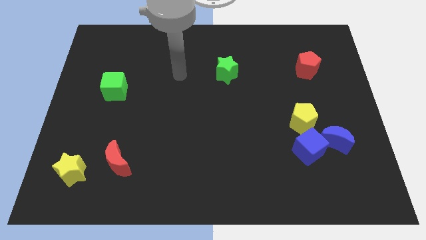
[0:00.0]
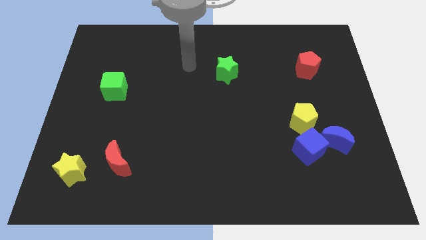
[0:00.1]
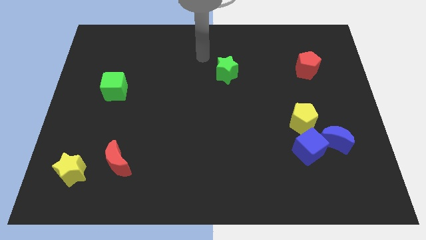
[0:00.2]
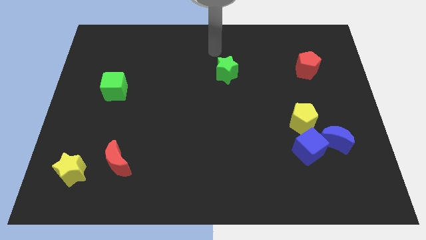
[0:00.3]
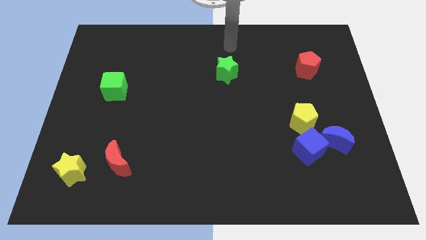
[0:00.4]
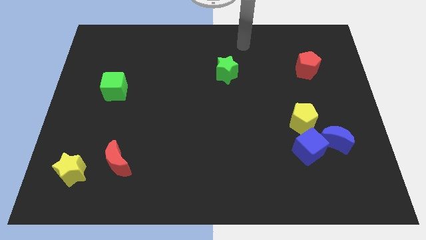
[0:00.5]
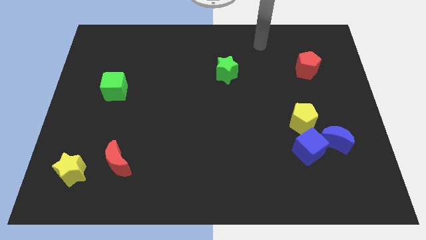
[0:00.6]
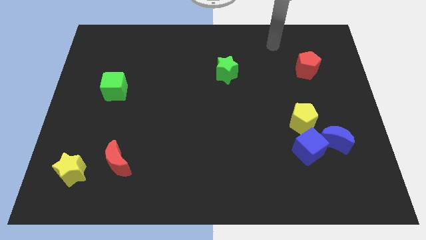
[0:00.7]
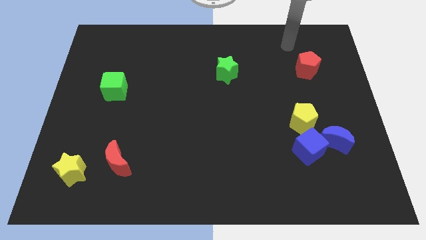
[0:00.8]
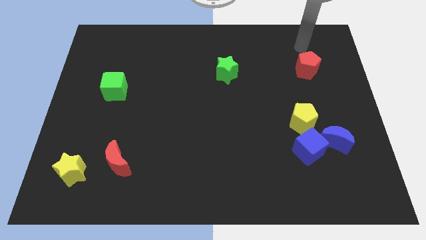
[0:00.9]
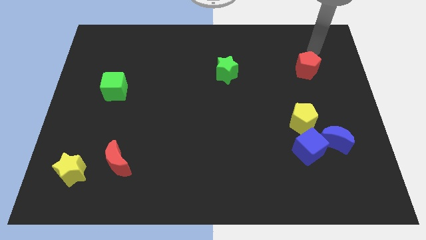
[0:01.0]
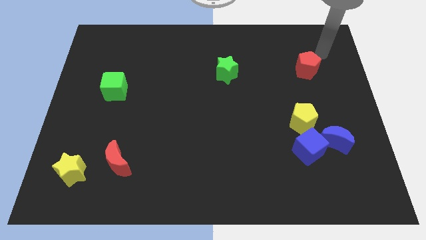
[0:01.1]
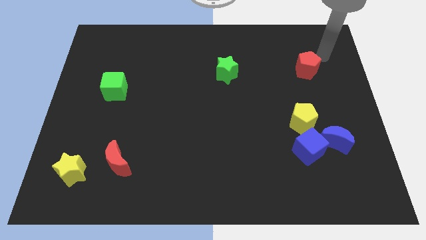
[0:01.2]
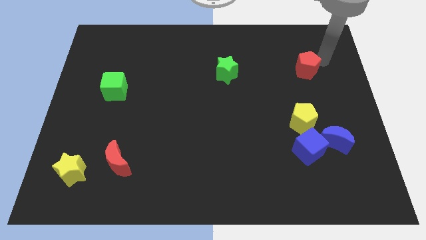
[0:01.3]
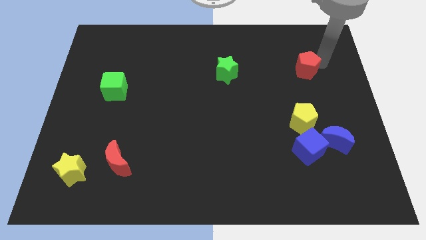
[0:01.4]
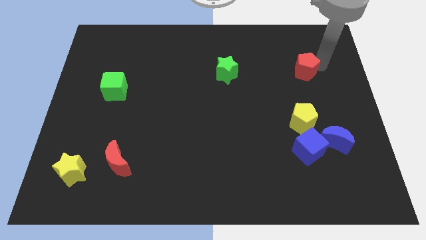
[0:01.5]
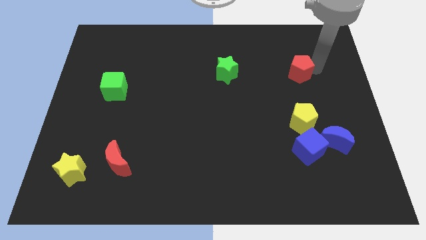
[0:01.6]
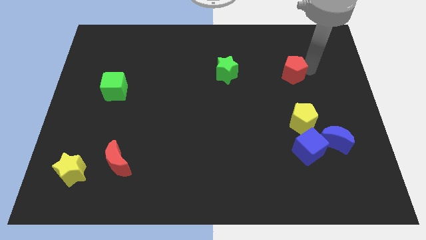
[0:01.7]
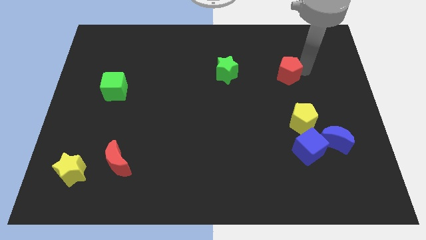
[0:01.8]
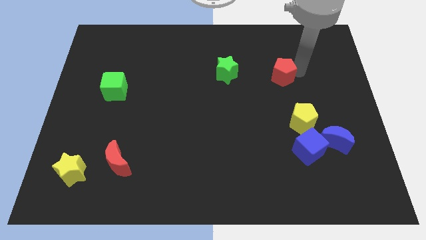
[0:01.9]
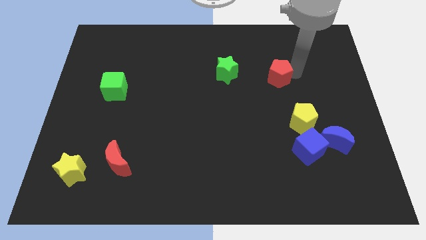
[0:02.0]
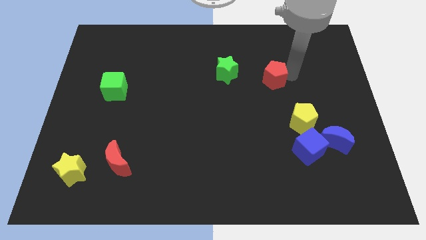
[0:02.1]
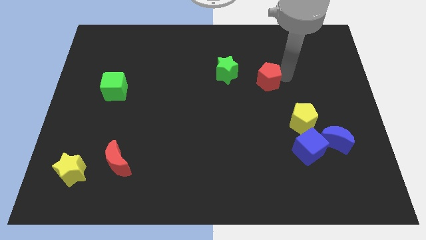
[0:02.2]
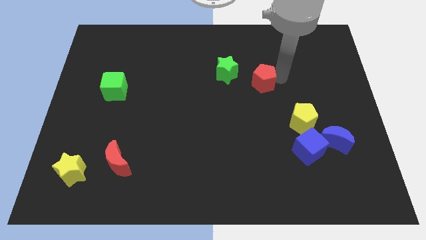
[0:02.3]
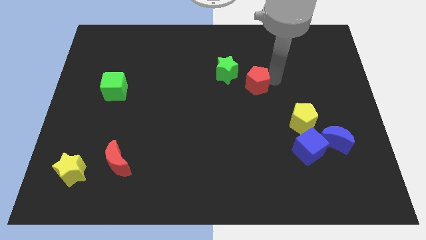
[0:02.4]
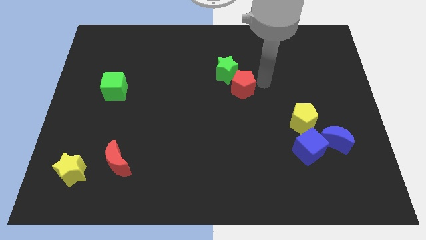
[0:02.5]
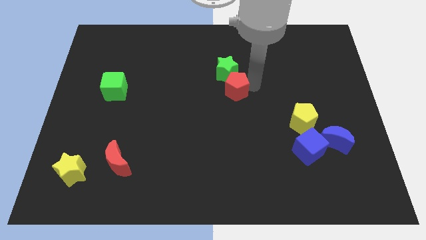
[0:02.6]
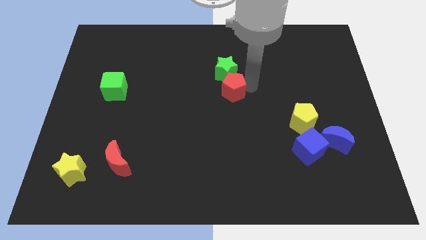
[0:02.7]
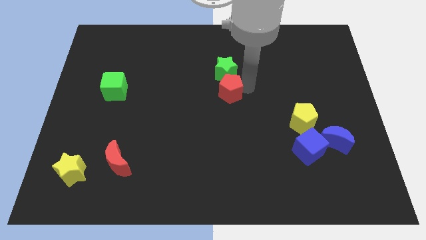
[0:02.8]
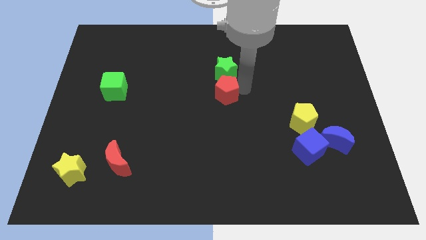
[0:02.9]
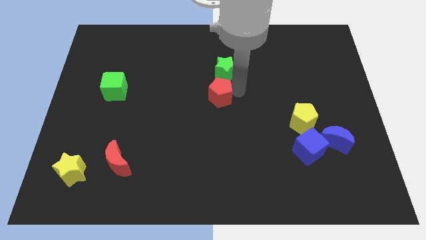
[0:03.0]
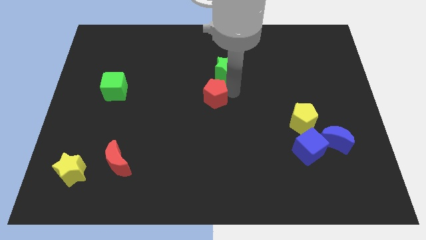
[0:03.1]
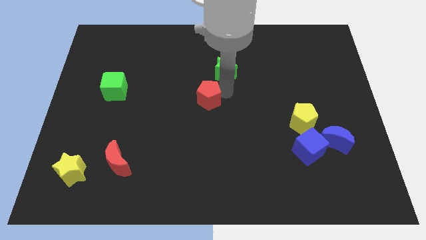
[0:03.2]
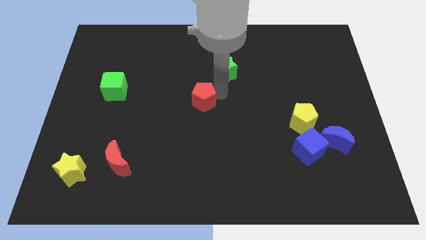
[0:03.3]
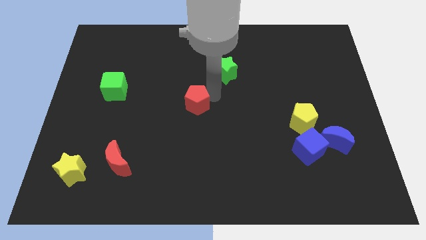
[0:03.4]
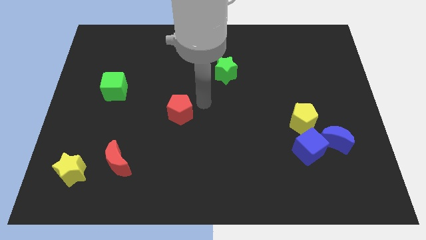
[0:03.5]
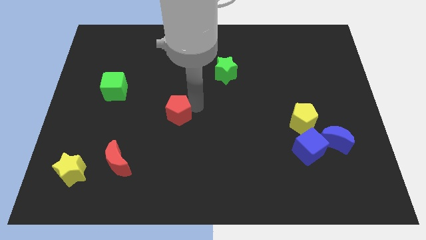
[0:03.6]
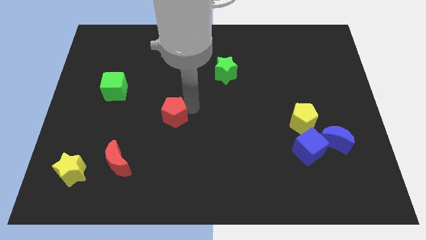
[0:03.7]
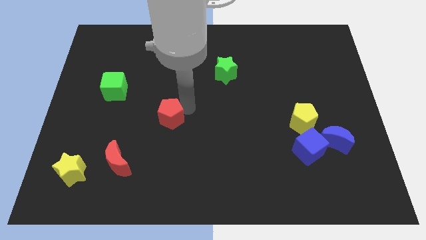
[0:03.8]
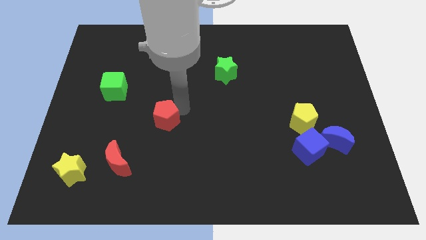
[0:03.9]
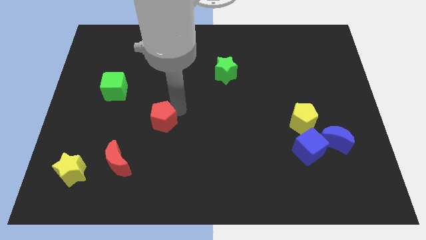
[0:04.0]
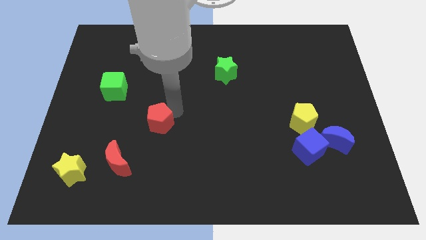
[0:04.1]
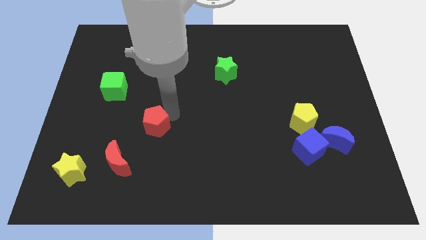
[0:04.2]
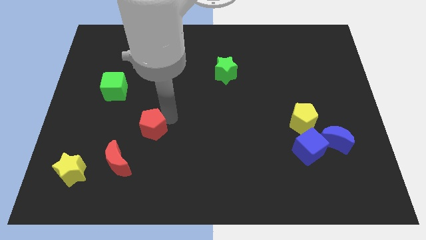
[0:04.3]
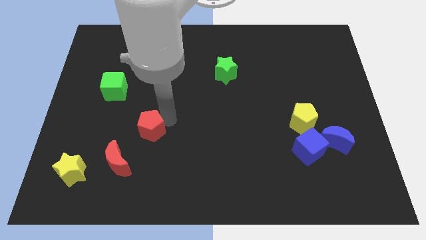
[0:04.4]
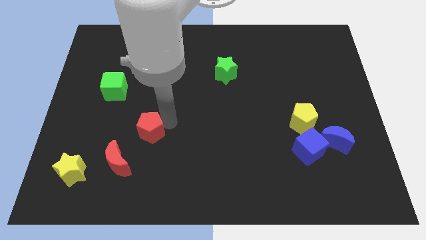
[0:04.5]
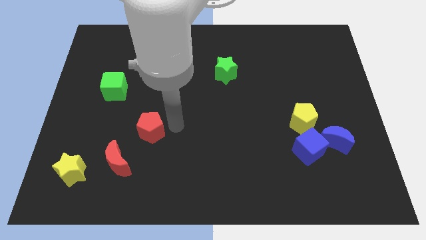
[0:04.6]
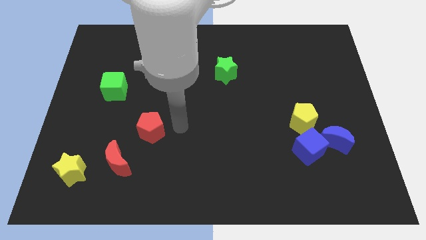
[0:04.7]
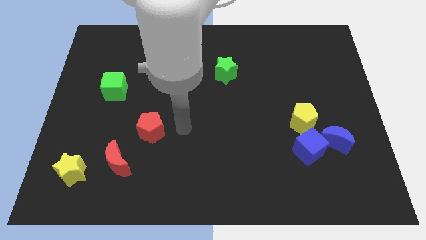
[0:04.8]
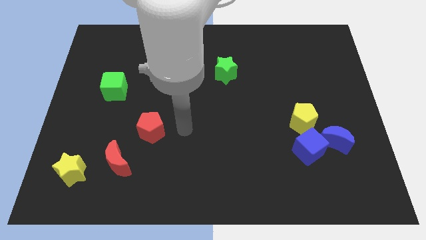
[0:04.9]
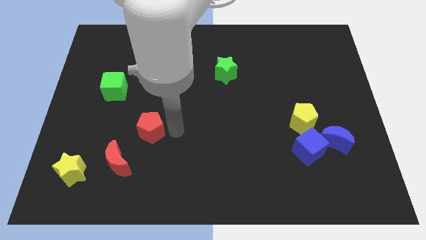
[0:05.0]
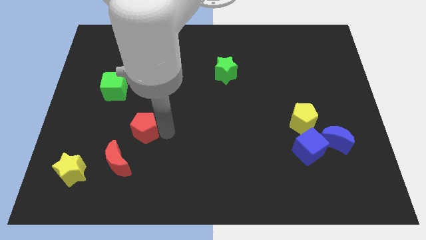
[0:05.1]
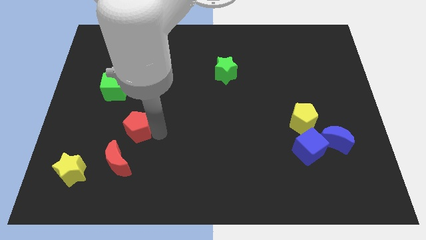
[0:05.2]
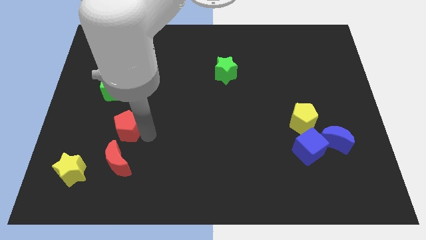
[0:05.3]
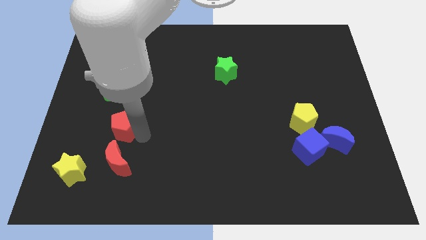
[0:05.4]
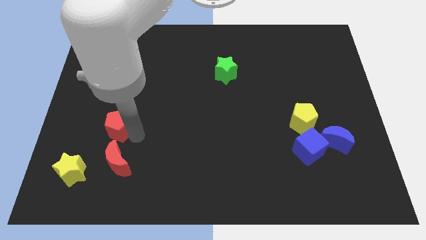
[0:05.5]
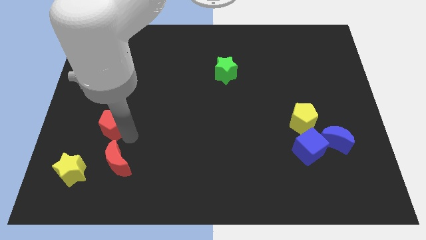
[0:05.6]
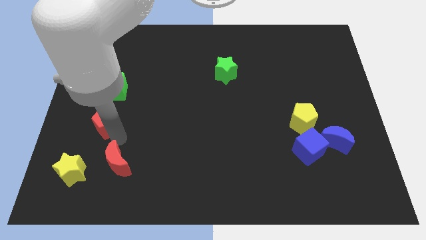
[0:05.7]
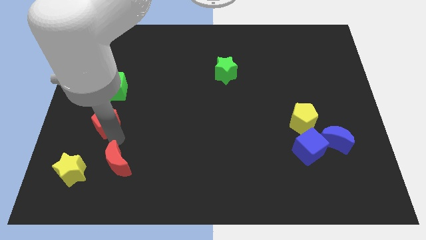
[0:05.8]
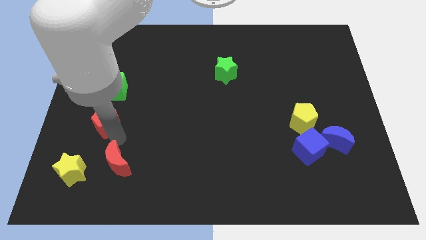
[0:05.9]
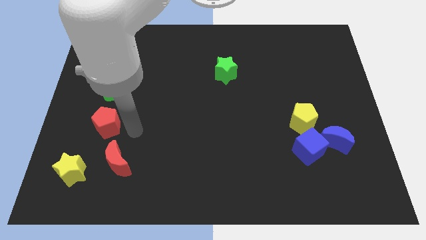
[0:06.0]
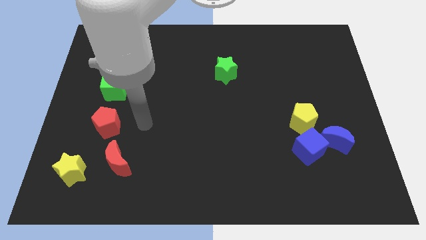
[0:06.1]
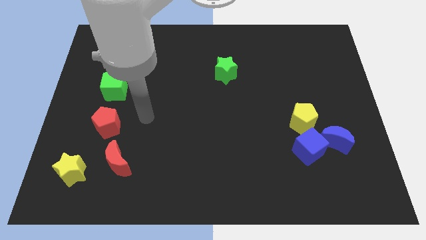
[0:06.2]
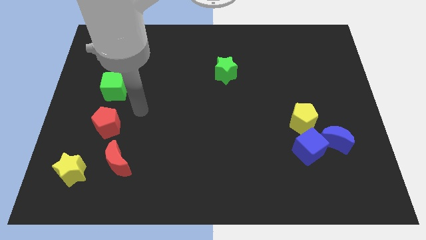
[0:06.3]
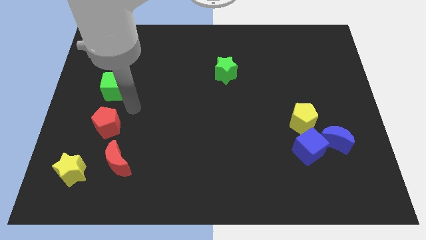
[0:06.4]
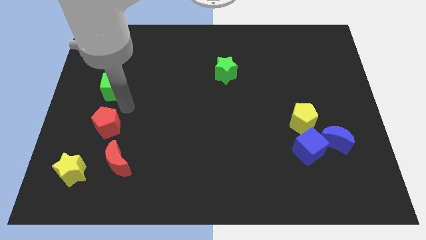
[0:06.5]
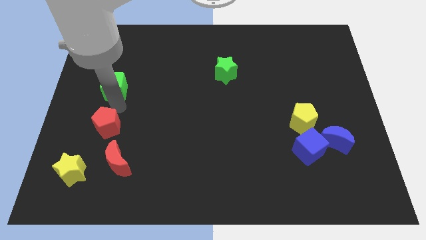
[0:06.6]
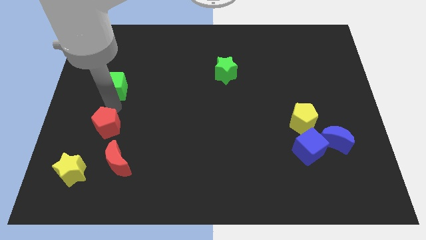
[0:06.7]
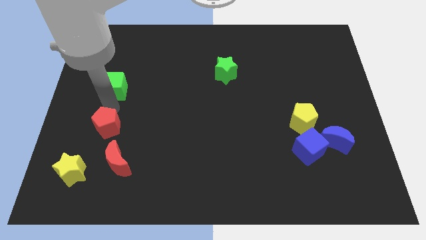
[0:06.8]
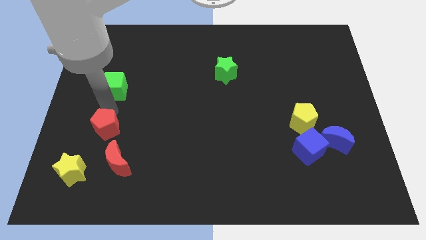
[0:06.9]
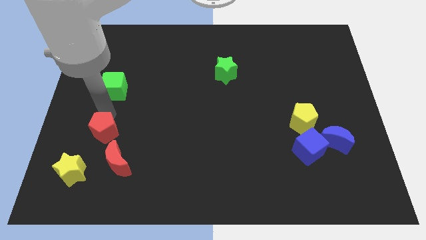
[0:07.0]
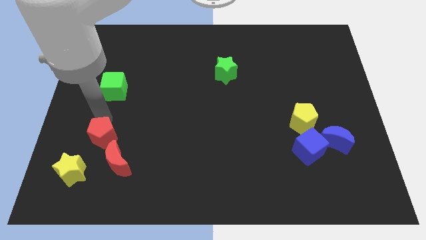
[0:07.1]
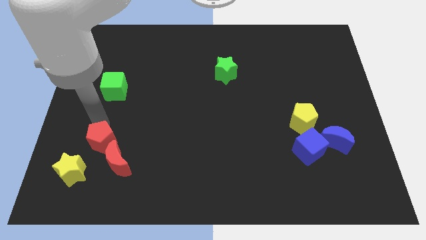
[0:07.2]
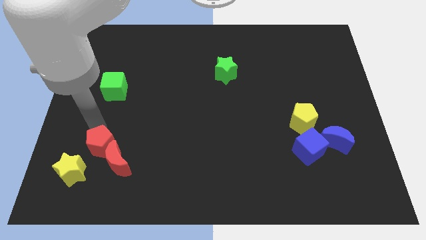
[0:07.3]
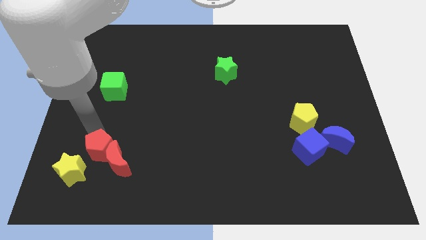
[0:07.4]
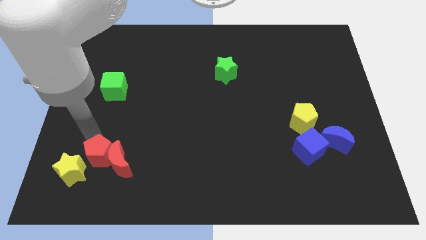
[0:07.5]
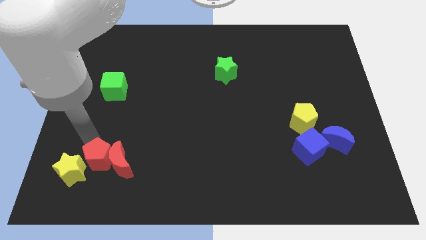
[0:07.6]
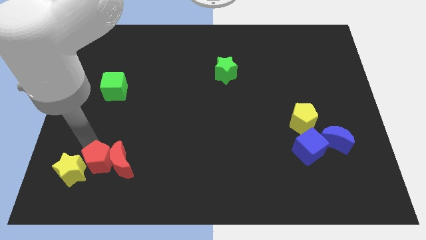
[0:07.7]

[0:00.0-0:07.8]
put the red pentagon close to the yellow star

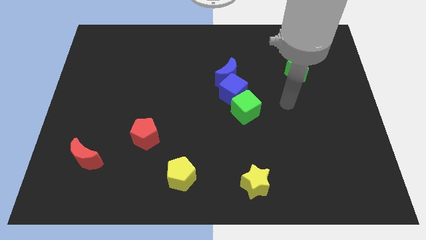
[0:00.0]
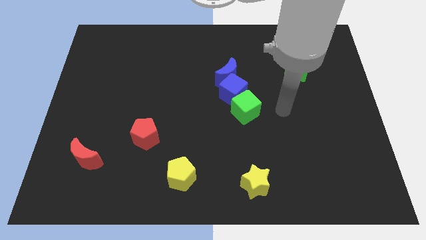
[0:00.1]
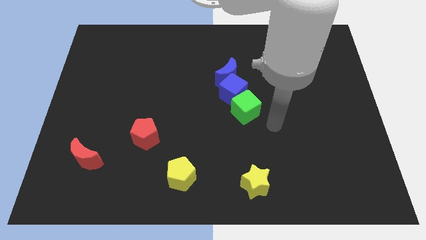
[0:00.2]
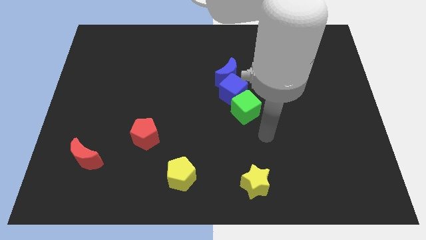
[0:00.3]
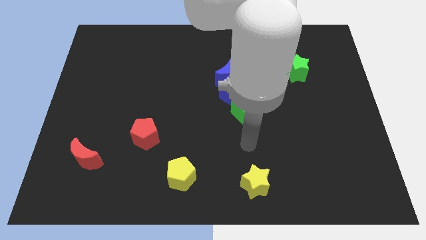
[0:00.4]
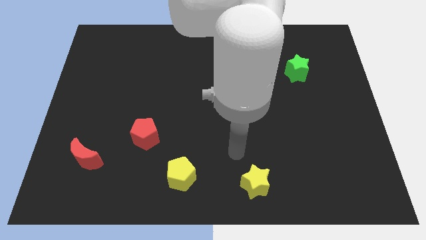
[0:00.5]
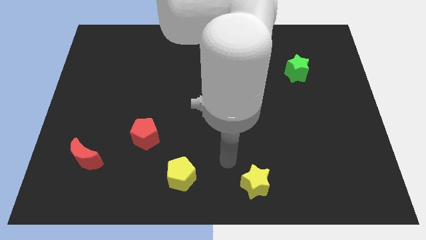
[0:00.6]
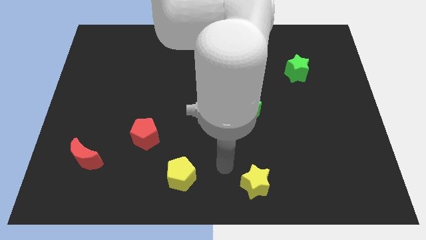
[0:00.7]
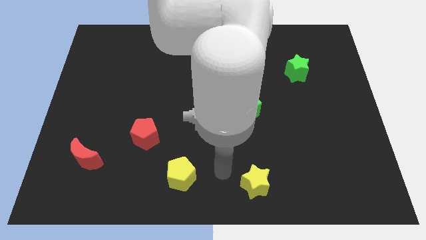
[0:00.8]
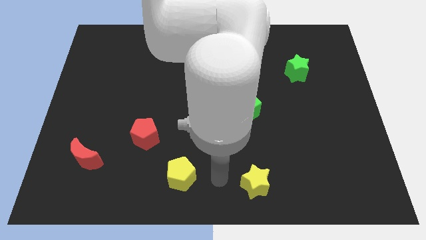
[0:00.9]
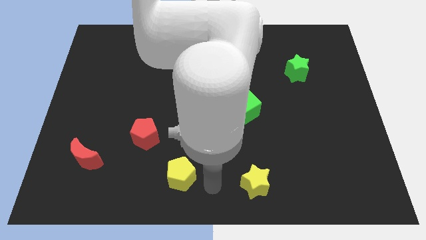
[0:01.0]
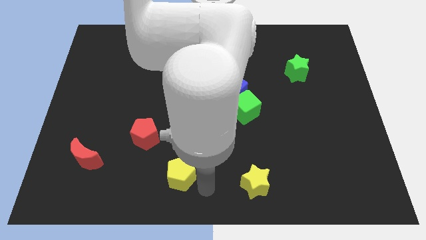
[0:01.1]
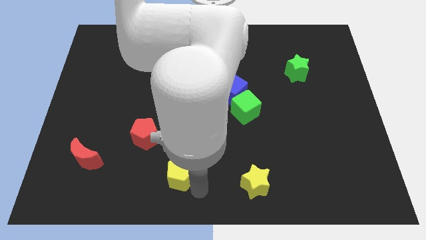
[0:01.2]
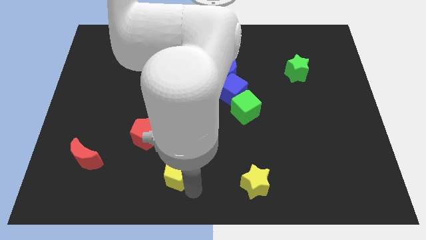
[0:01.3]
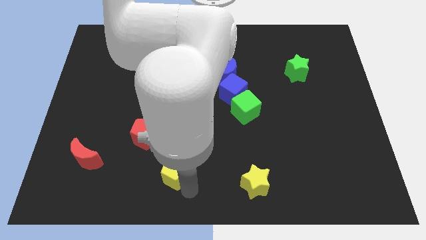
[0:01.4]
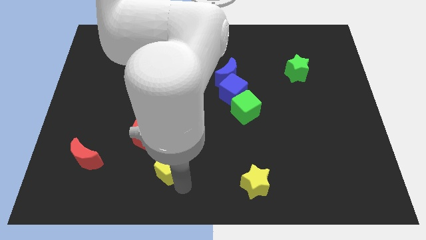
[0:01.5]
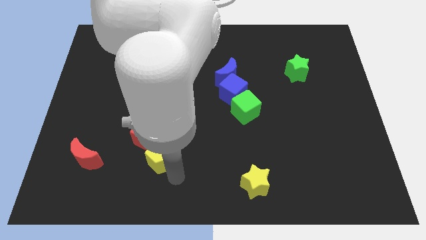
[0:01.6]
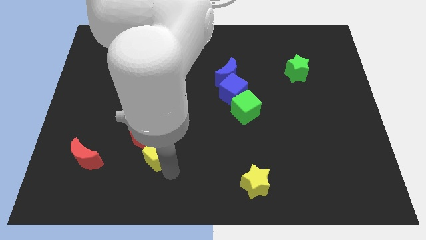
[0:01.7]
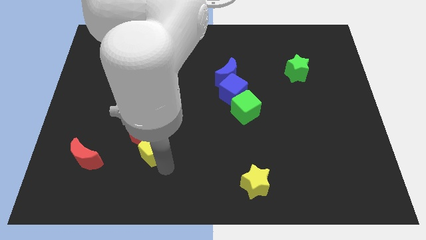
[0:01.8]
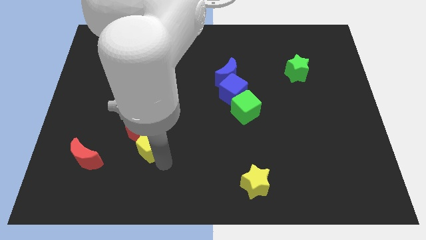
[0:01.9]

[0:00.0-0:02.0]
slide the yellow pentagon towards the red pentagon
